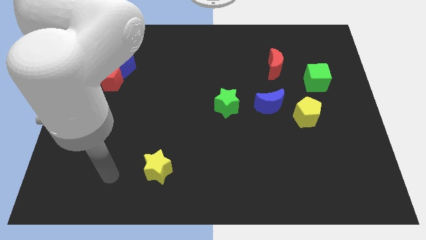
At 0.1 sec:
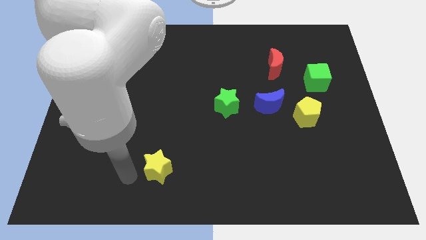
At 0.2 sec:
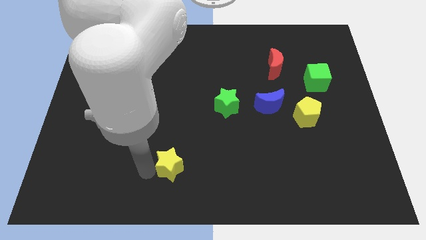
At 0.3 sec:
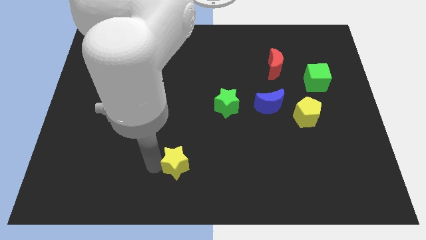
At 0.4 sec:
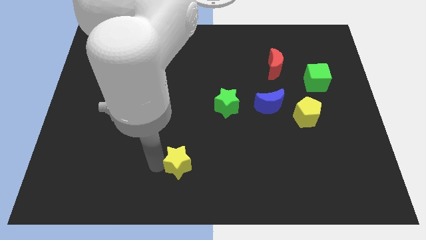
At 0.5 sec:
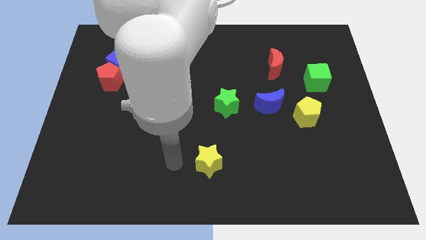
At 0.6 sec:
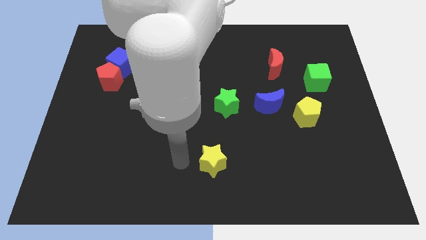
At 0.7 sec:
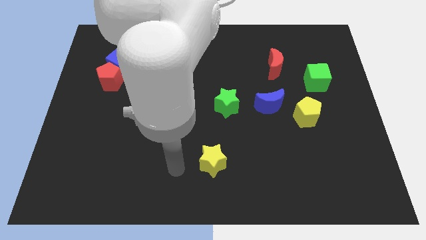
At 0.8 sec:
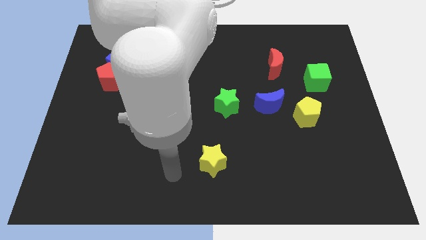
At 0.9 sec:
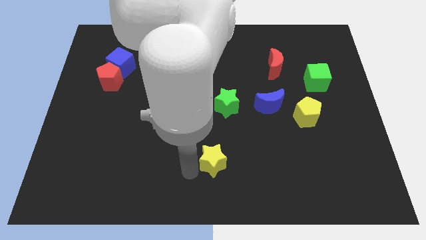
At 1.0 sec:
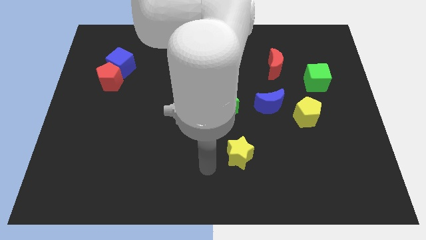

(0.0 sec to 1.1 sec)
push the yellow star slightly to the right of the board

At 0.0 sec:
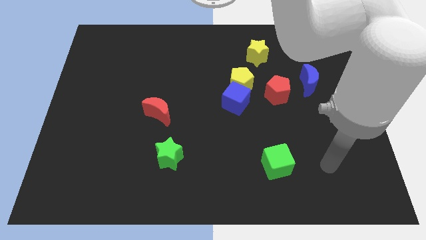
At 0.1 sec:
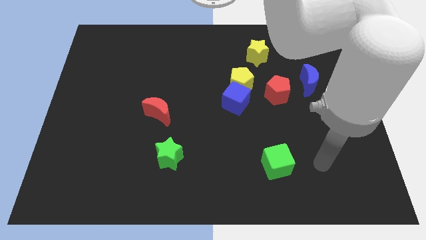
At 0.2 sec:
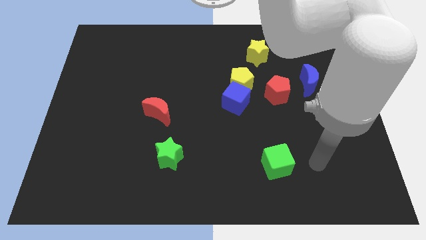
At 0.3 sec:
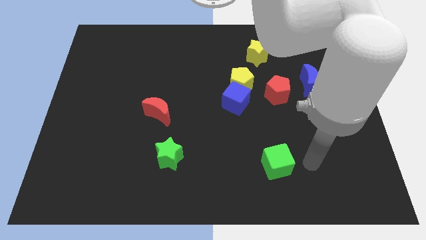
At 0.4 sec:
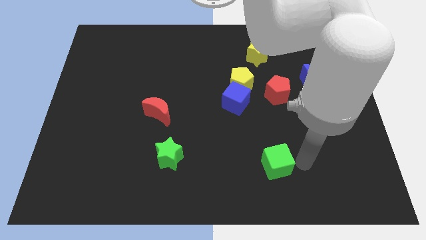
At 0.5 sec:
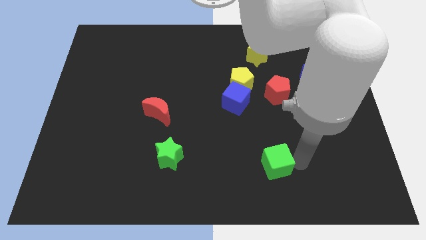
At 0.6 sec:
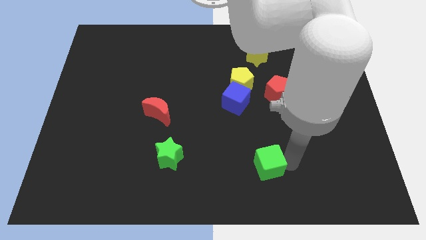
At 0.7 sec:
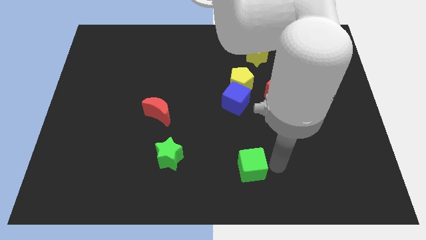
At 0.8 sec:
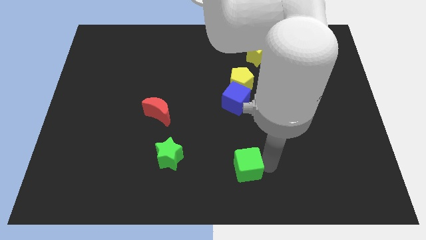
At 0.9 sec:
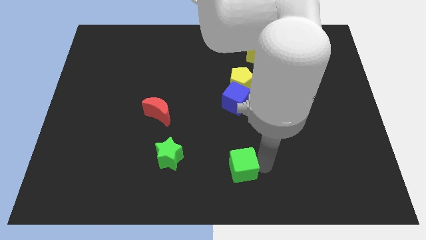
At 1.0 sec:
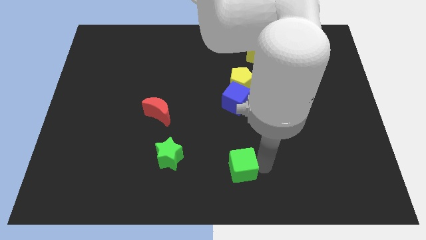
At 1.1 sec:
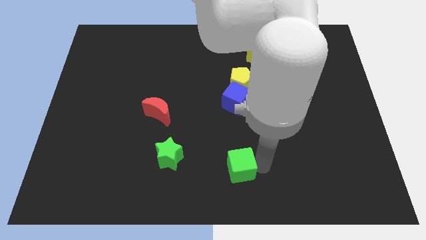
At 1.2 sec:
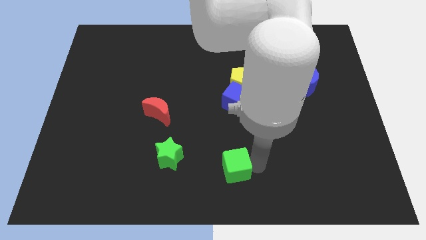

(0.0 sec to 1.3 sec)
place the green cube vertically at the bottom side of the blue cube

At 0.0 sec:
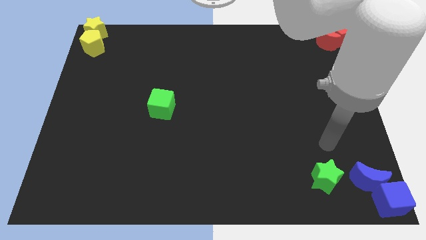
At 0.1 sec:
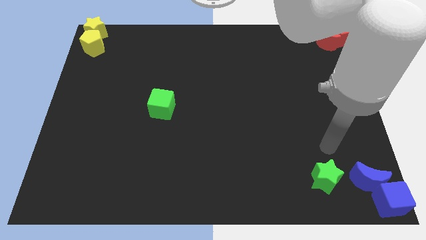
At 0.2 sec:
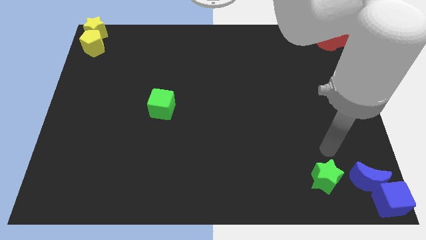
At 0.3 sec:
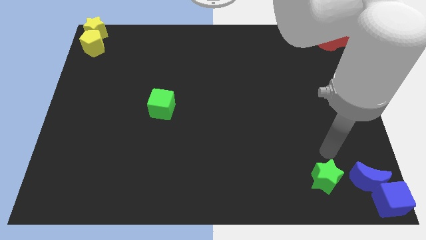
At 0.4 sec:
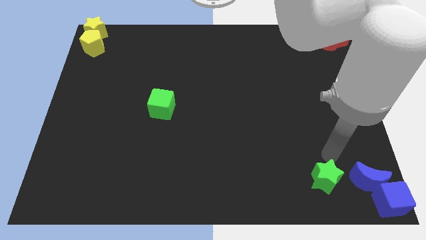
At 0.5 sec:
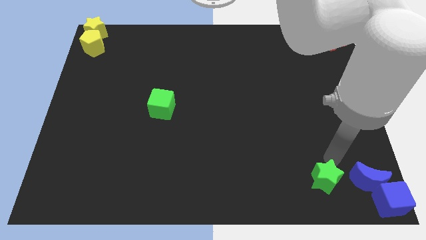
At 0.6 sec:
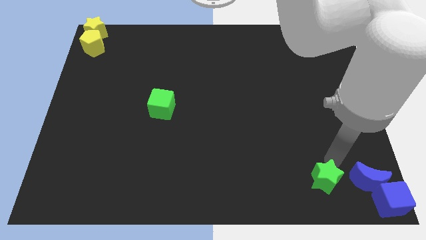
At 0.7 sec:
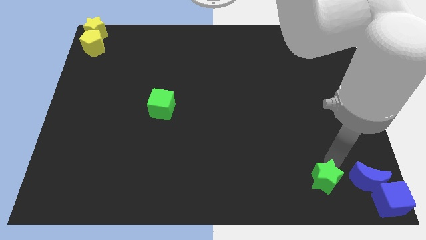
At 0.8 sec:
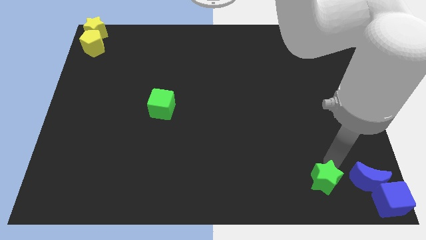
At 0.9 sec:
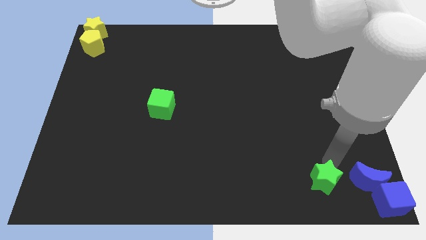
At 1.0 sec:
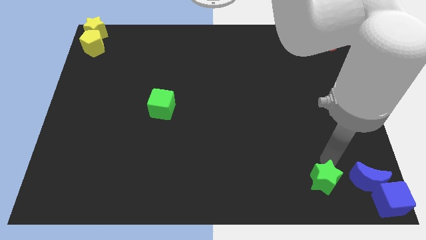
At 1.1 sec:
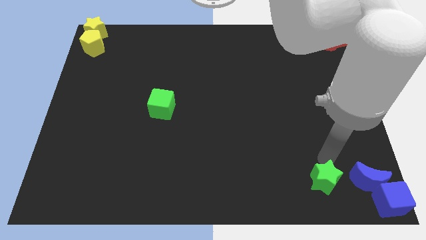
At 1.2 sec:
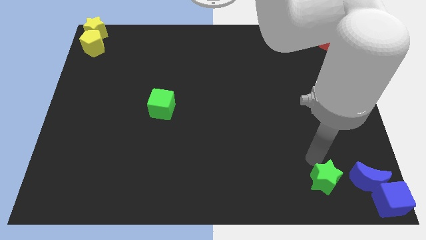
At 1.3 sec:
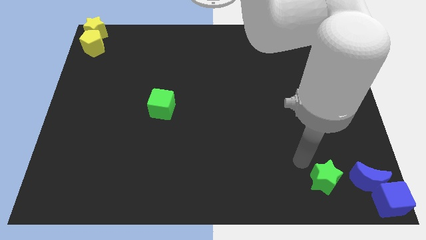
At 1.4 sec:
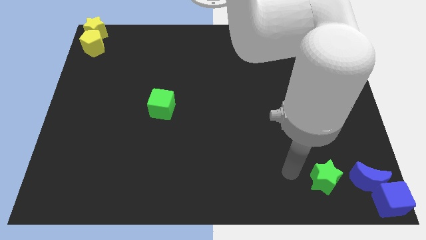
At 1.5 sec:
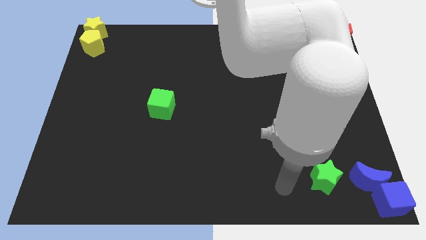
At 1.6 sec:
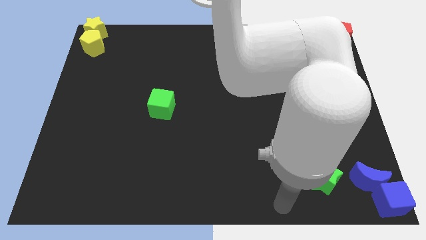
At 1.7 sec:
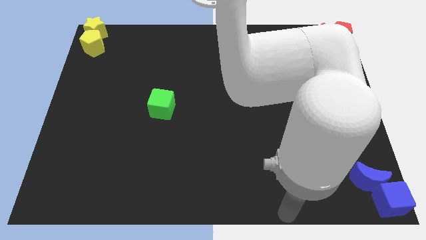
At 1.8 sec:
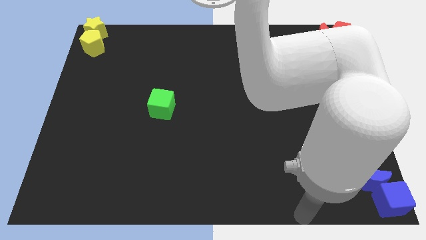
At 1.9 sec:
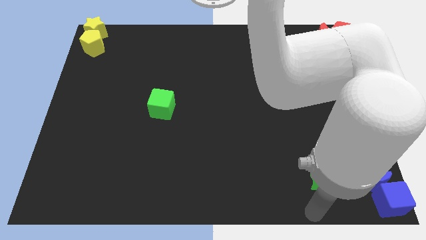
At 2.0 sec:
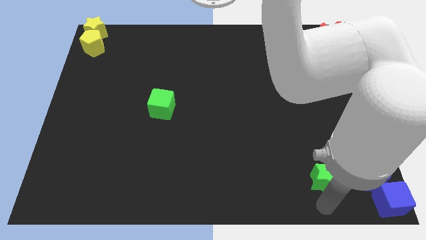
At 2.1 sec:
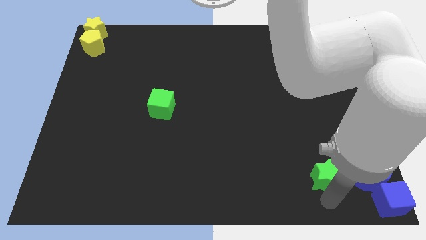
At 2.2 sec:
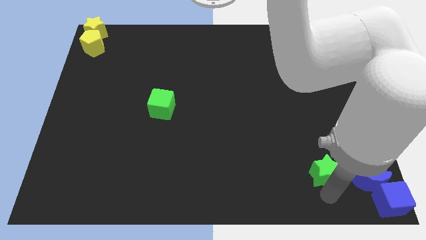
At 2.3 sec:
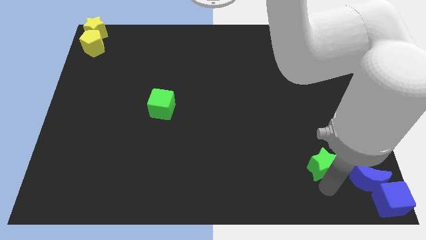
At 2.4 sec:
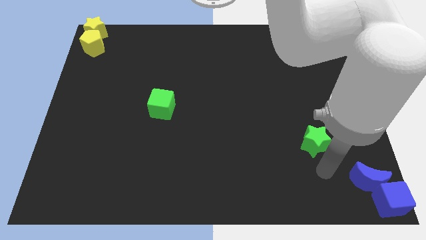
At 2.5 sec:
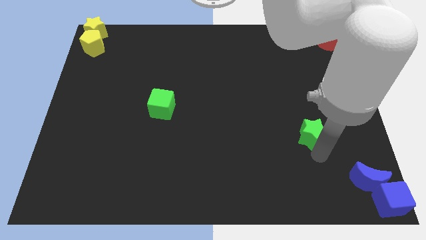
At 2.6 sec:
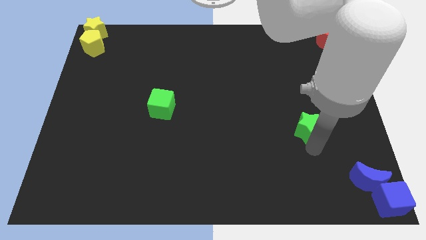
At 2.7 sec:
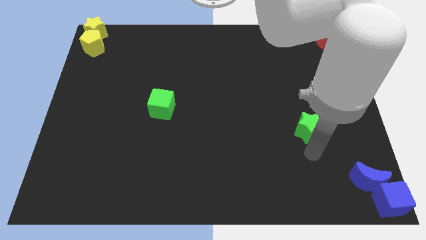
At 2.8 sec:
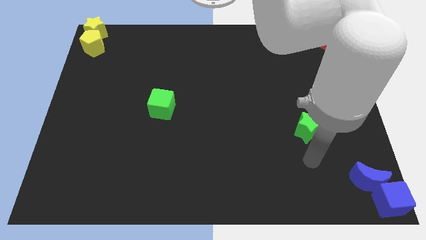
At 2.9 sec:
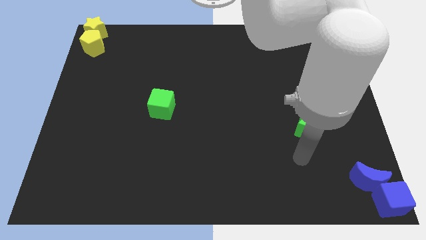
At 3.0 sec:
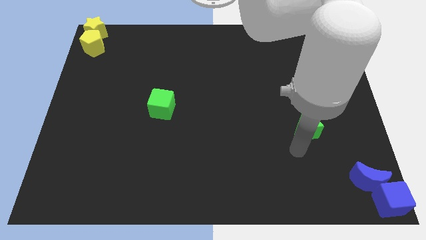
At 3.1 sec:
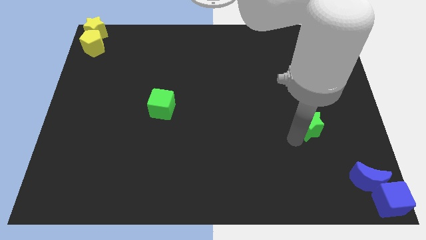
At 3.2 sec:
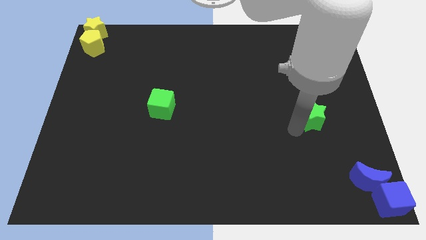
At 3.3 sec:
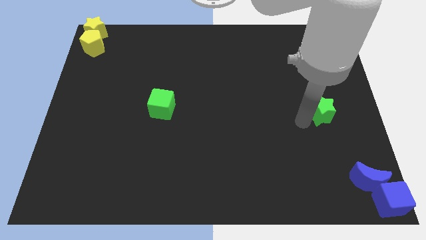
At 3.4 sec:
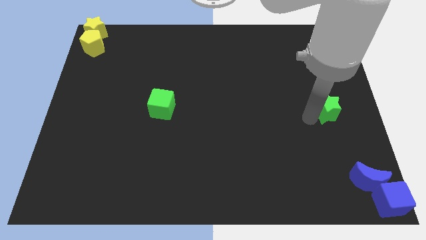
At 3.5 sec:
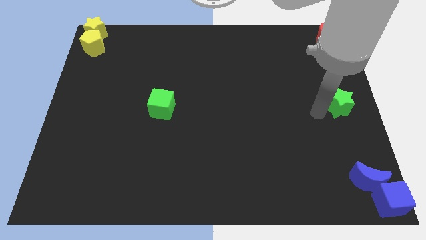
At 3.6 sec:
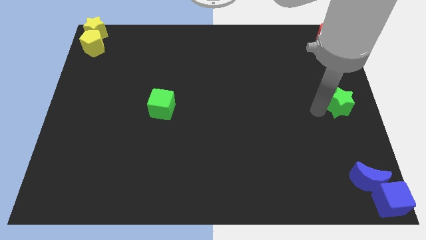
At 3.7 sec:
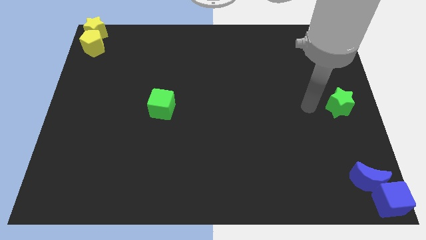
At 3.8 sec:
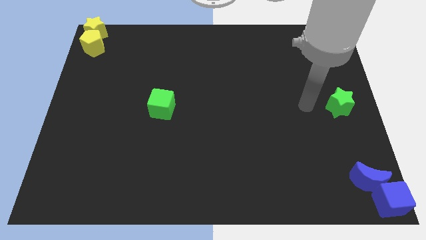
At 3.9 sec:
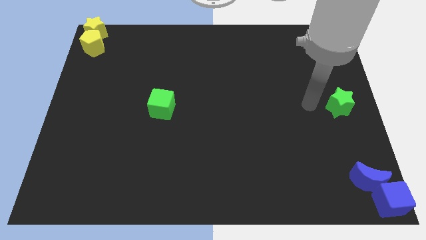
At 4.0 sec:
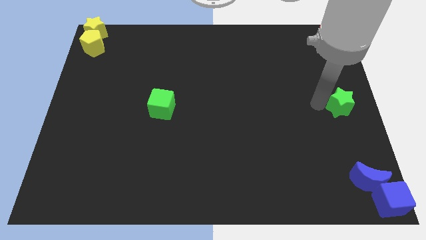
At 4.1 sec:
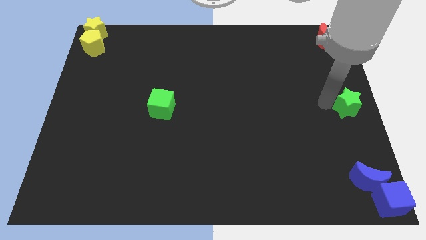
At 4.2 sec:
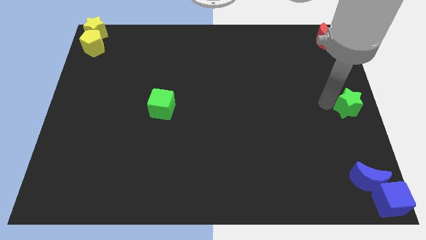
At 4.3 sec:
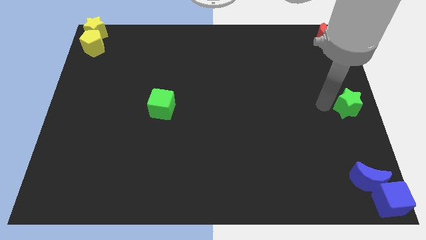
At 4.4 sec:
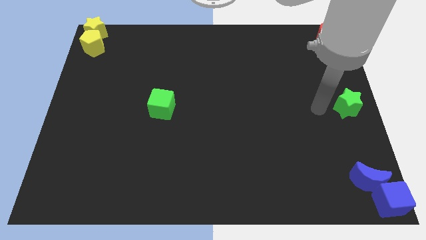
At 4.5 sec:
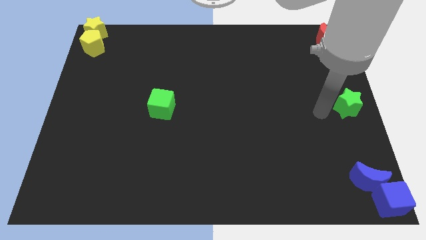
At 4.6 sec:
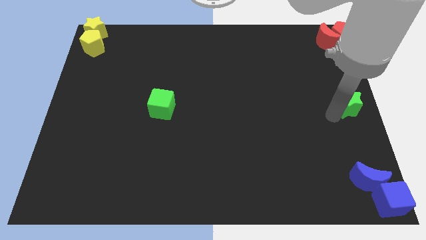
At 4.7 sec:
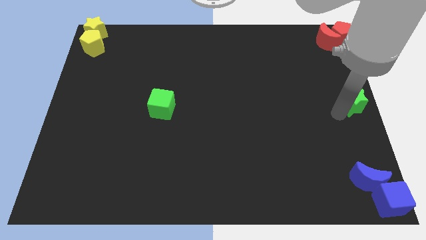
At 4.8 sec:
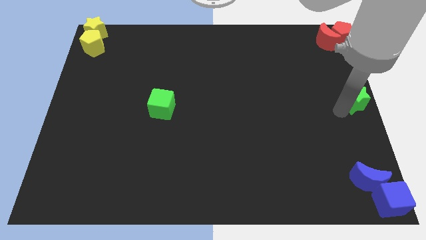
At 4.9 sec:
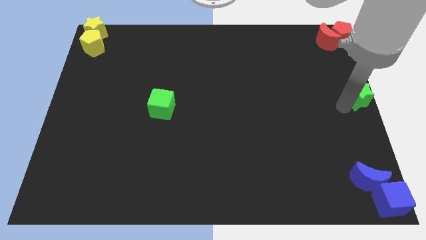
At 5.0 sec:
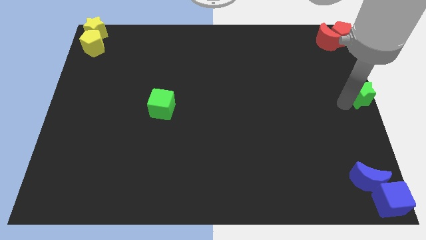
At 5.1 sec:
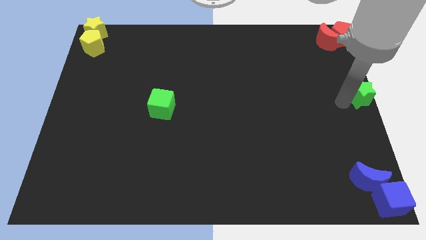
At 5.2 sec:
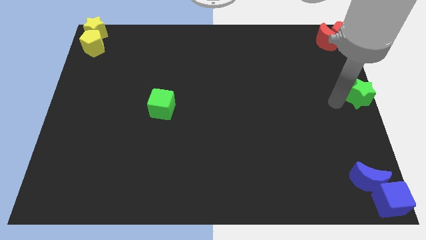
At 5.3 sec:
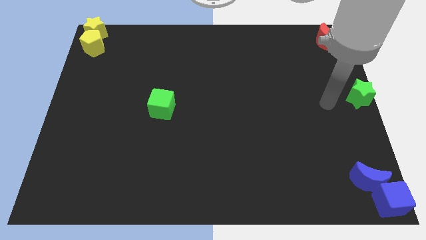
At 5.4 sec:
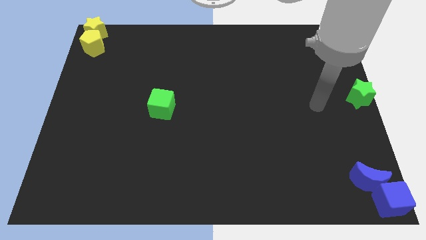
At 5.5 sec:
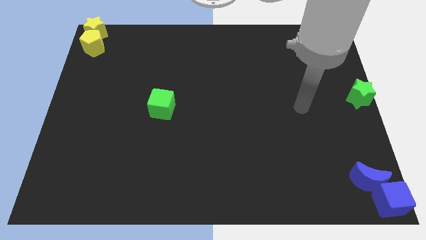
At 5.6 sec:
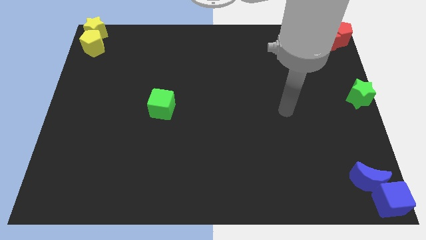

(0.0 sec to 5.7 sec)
move the green star to the right center of the board

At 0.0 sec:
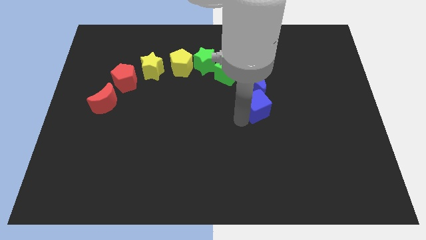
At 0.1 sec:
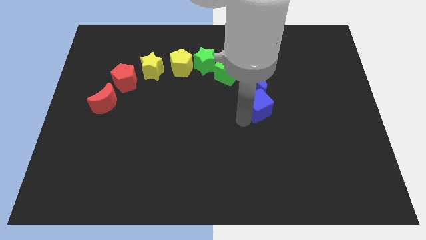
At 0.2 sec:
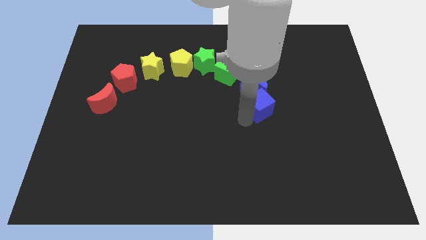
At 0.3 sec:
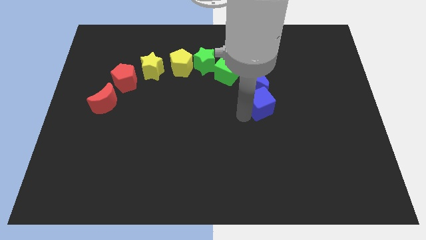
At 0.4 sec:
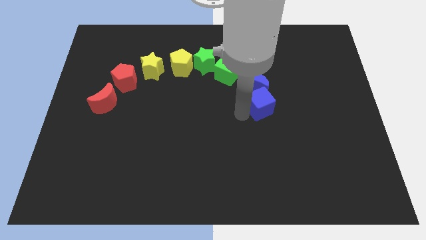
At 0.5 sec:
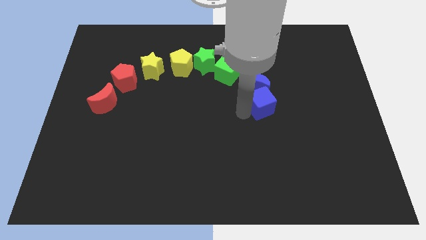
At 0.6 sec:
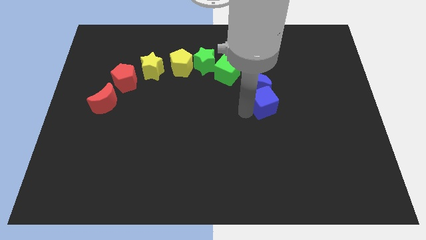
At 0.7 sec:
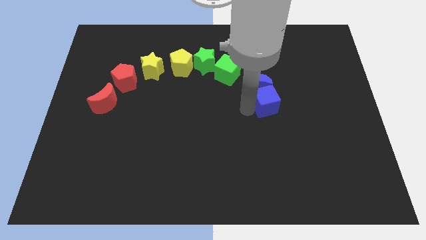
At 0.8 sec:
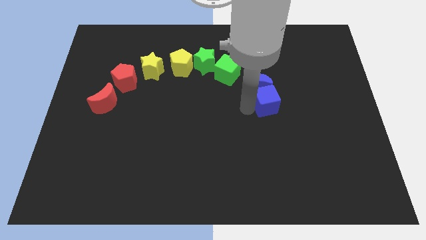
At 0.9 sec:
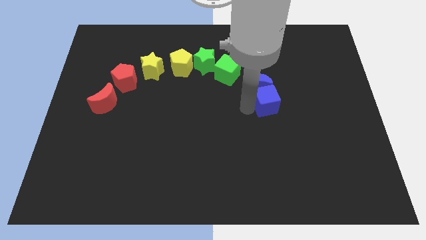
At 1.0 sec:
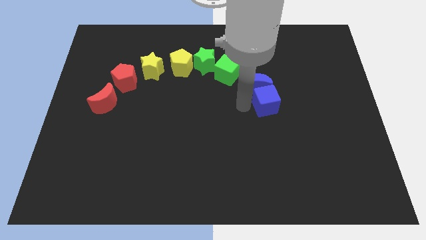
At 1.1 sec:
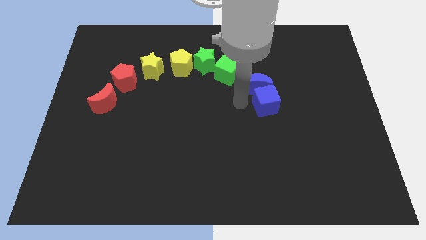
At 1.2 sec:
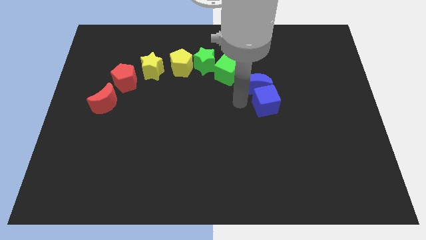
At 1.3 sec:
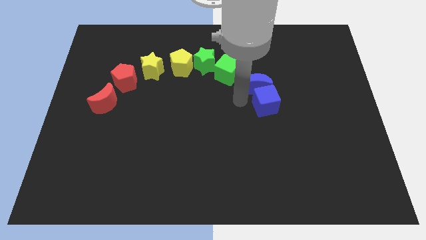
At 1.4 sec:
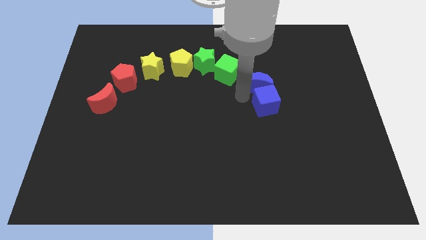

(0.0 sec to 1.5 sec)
move blue cube into blue crescent
